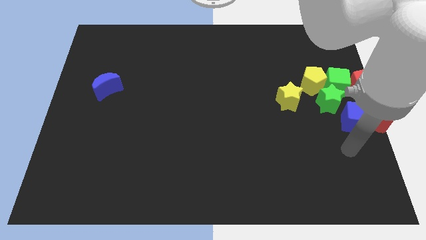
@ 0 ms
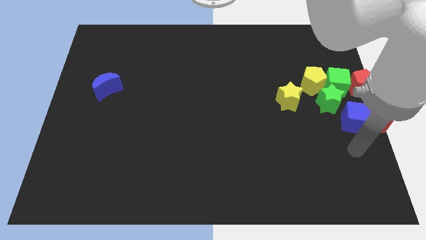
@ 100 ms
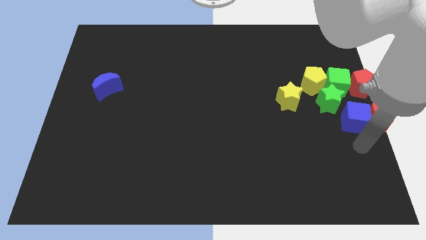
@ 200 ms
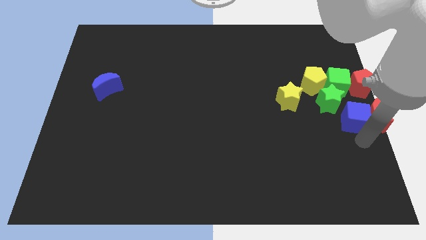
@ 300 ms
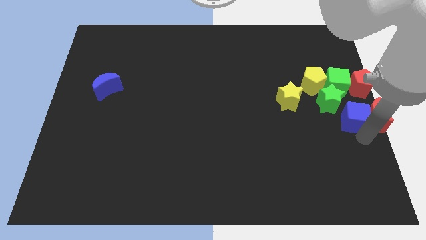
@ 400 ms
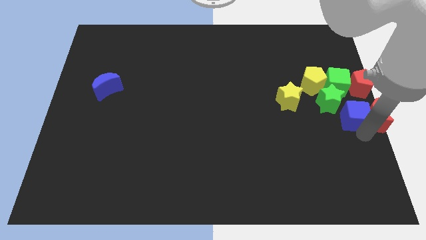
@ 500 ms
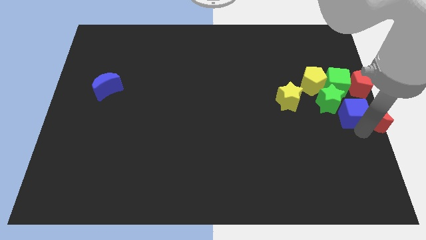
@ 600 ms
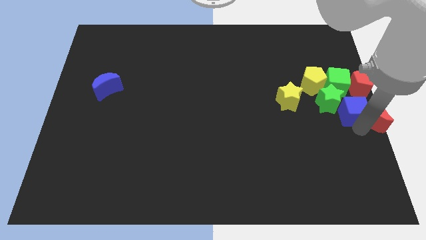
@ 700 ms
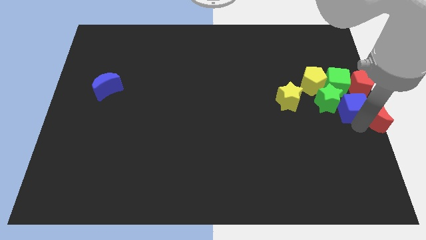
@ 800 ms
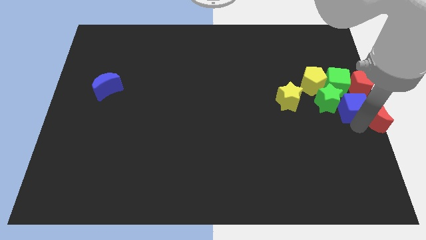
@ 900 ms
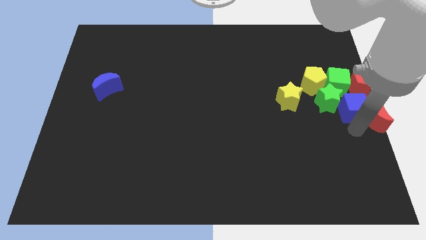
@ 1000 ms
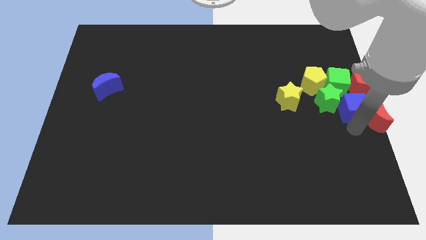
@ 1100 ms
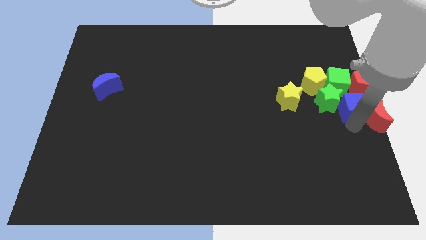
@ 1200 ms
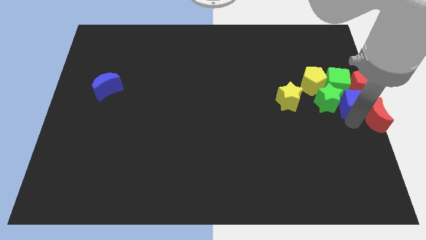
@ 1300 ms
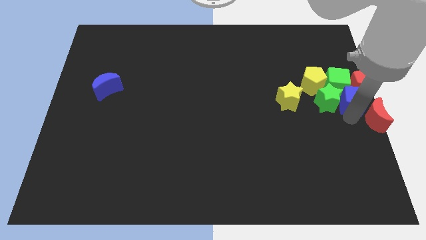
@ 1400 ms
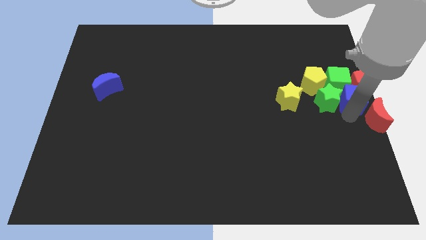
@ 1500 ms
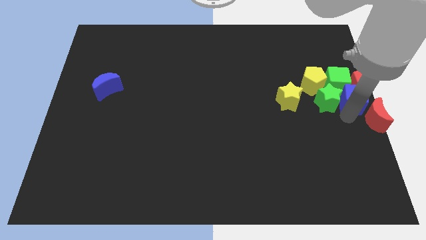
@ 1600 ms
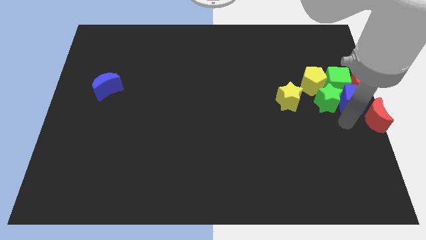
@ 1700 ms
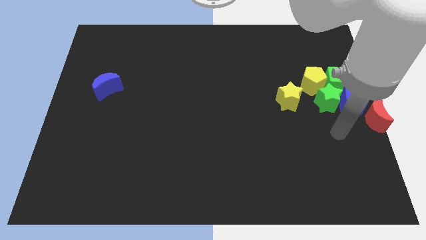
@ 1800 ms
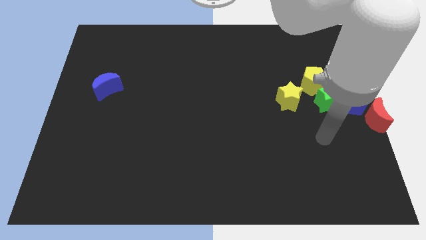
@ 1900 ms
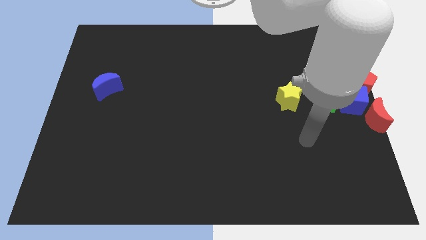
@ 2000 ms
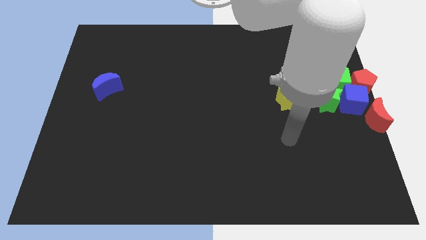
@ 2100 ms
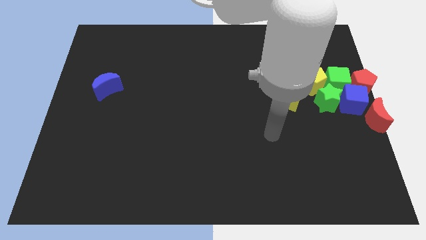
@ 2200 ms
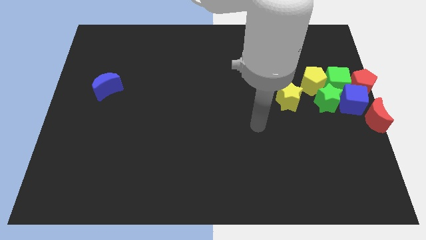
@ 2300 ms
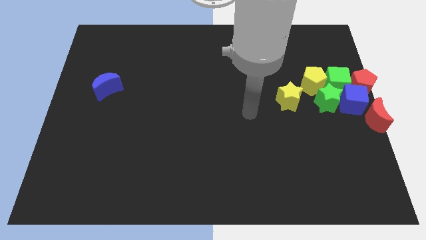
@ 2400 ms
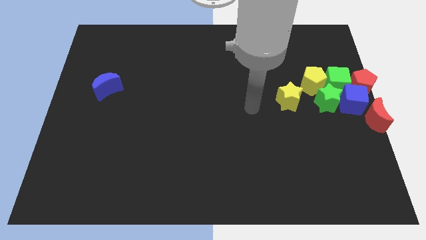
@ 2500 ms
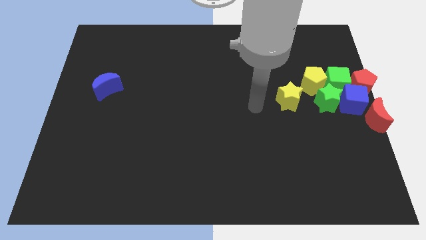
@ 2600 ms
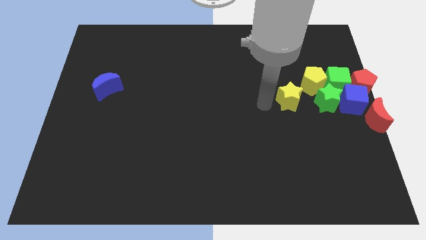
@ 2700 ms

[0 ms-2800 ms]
push the blue cube into the green cube

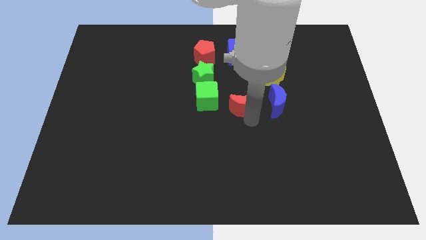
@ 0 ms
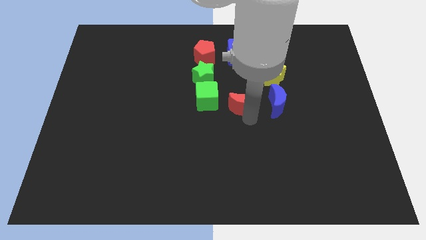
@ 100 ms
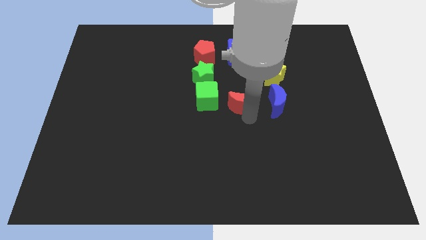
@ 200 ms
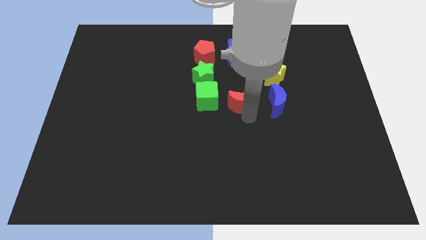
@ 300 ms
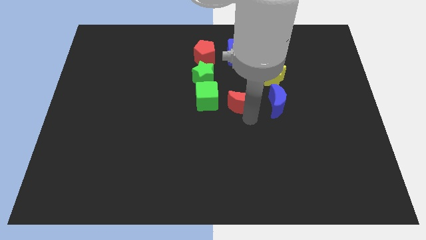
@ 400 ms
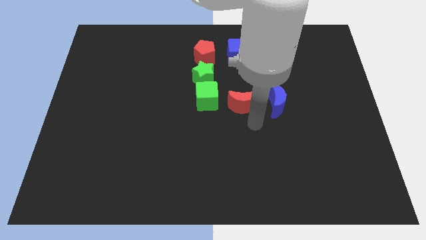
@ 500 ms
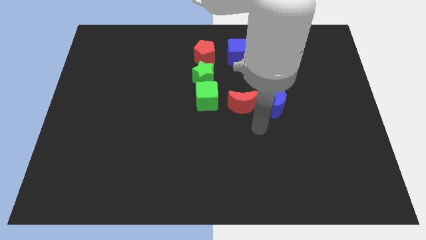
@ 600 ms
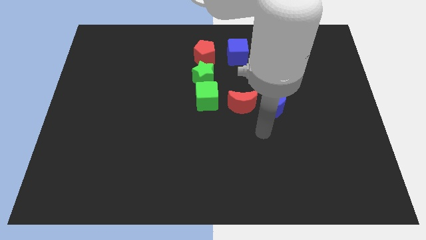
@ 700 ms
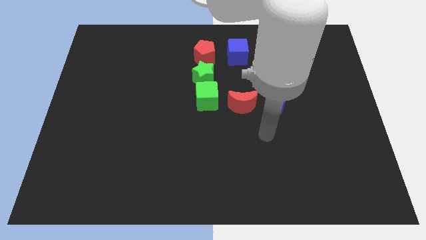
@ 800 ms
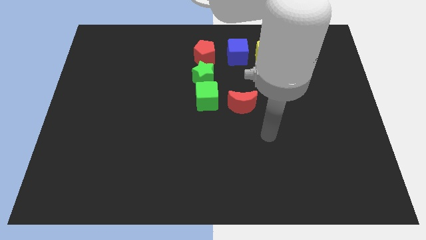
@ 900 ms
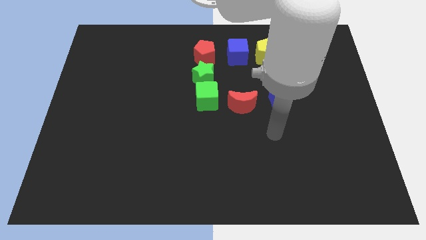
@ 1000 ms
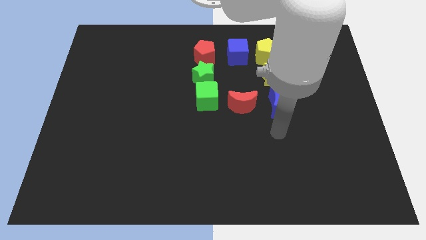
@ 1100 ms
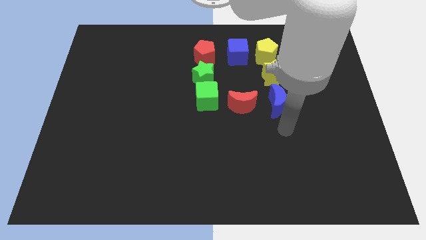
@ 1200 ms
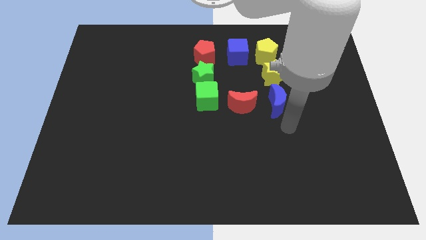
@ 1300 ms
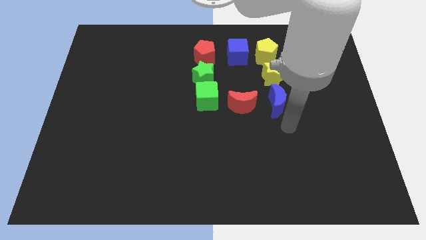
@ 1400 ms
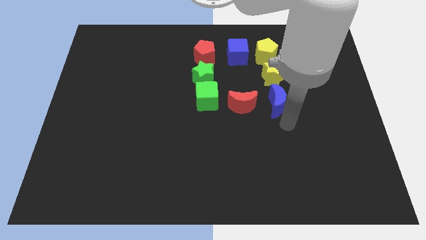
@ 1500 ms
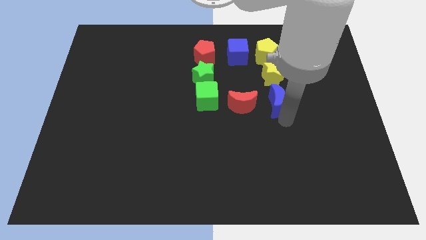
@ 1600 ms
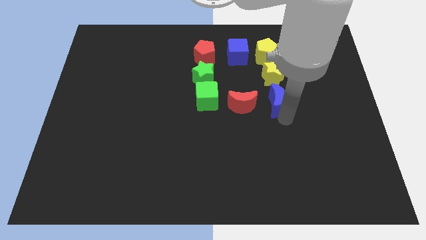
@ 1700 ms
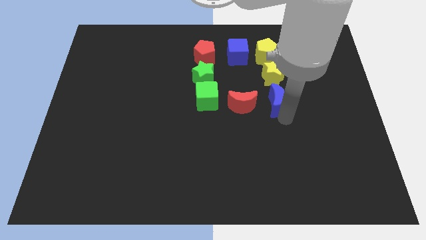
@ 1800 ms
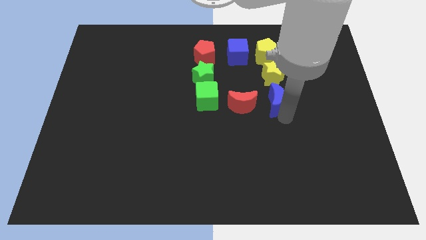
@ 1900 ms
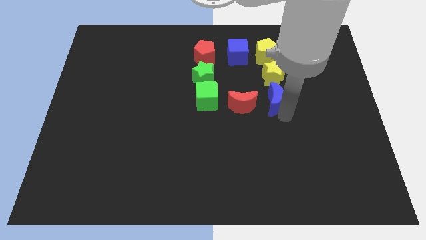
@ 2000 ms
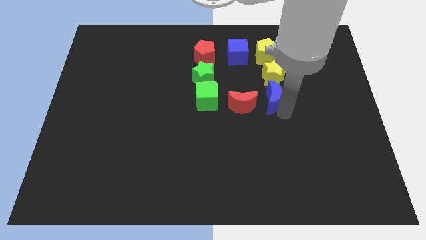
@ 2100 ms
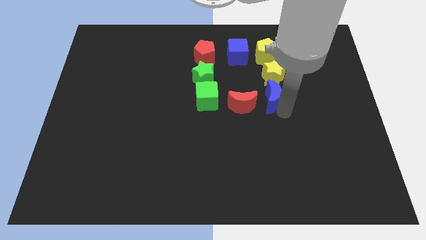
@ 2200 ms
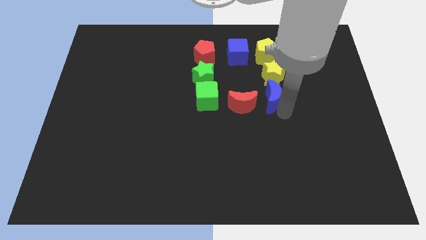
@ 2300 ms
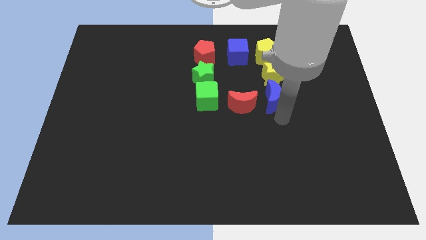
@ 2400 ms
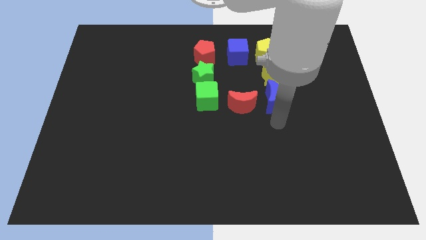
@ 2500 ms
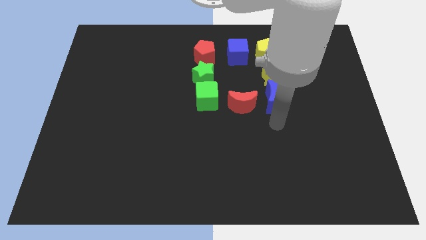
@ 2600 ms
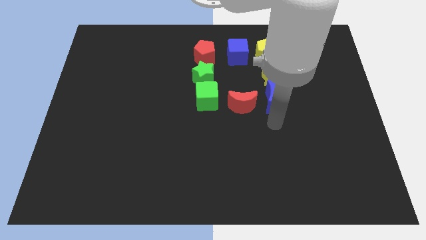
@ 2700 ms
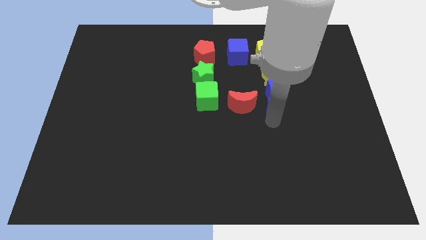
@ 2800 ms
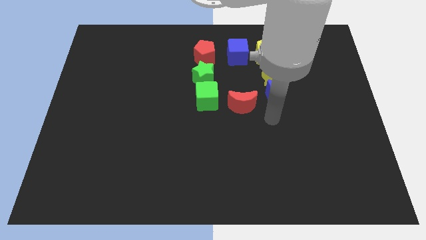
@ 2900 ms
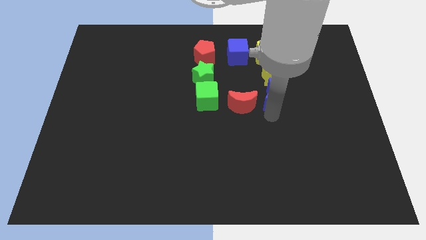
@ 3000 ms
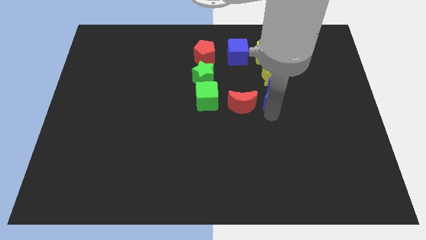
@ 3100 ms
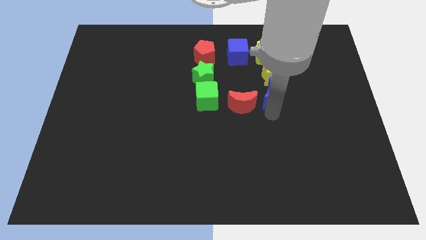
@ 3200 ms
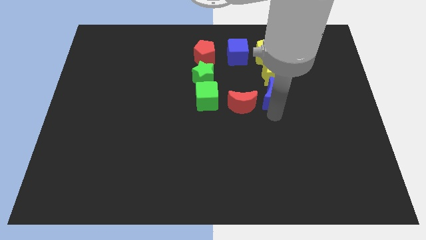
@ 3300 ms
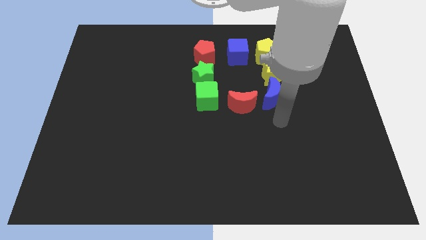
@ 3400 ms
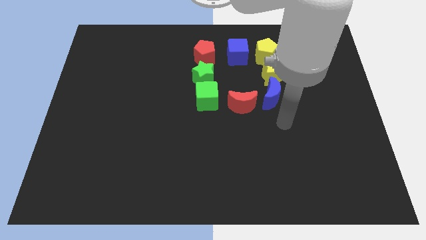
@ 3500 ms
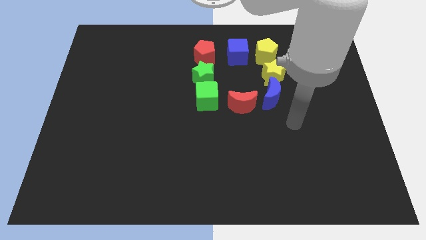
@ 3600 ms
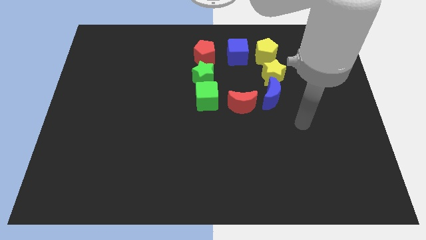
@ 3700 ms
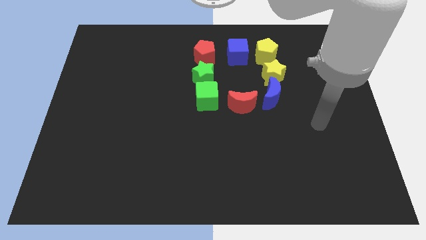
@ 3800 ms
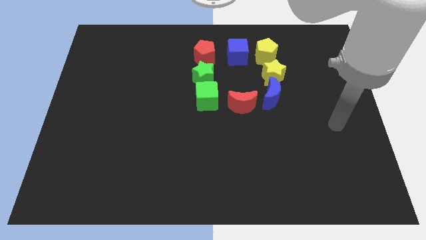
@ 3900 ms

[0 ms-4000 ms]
slide the blue crescent into the yellow star

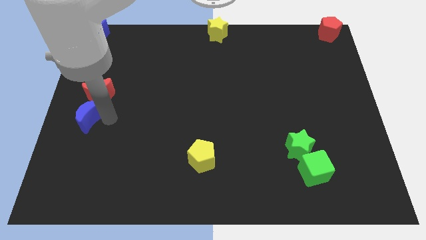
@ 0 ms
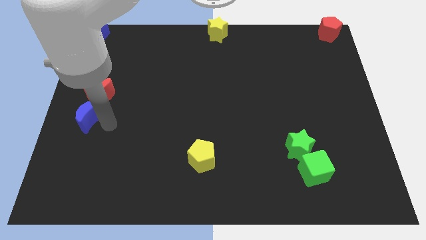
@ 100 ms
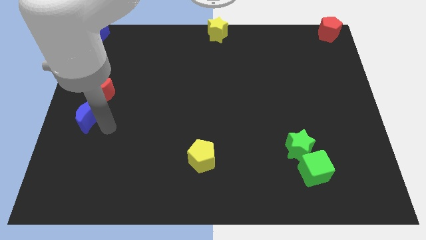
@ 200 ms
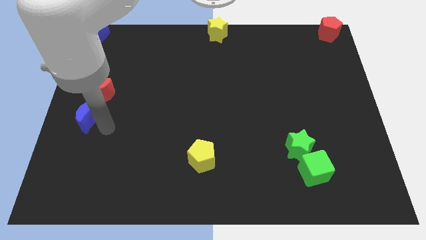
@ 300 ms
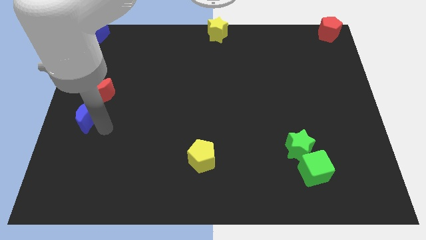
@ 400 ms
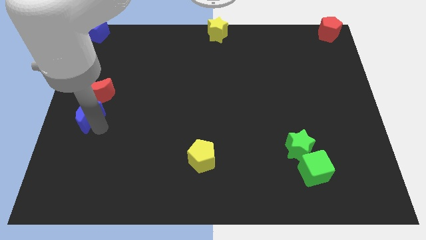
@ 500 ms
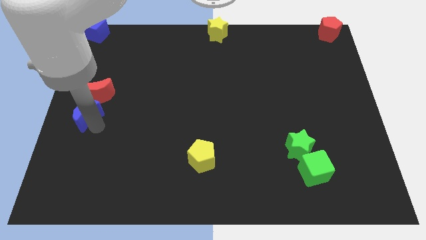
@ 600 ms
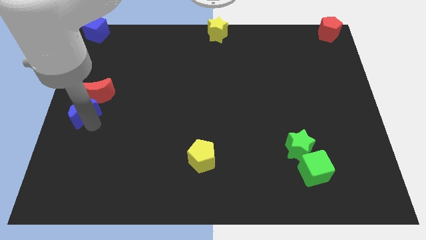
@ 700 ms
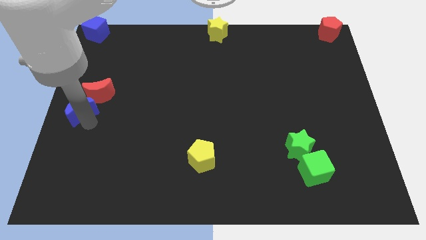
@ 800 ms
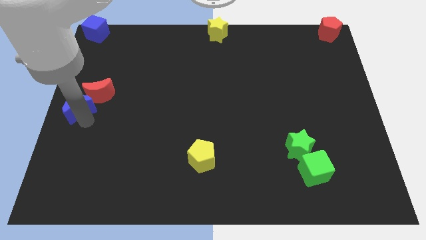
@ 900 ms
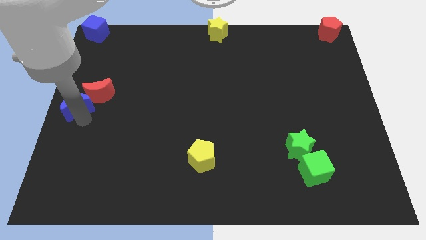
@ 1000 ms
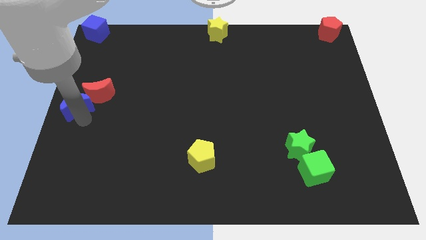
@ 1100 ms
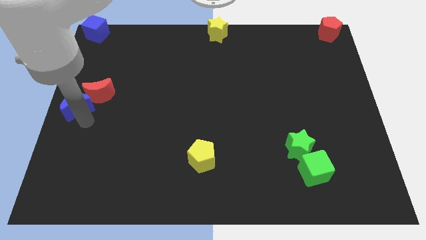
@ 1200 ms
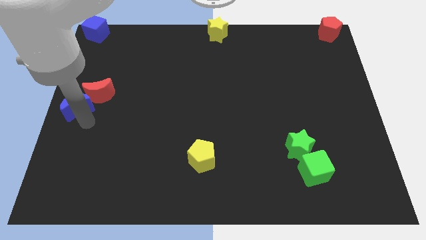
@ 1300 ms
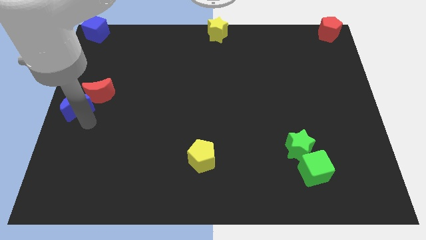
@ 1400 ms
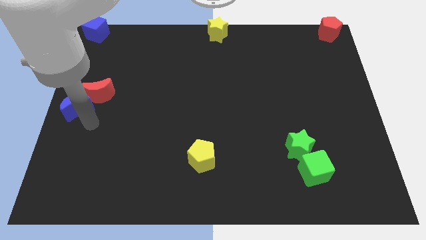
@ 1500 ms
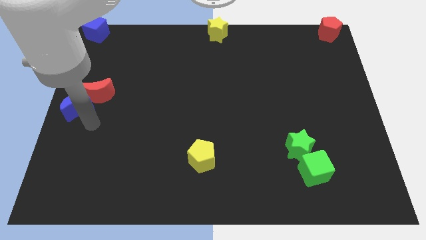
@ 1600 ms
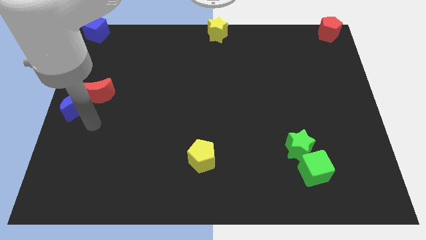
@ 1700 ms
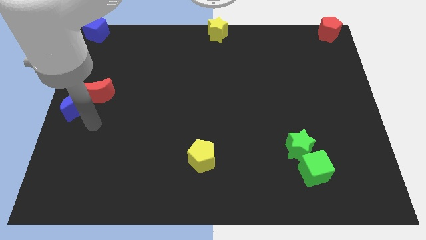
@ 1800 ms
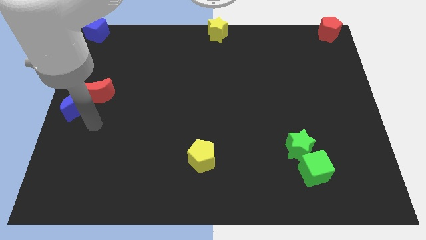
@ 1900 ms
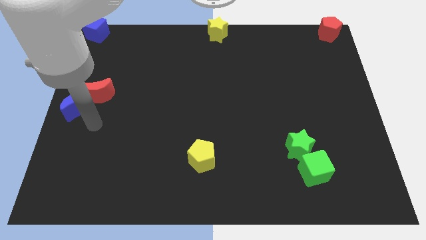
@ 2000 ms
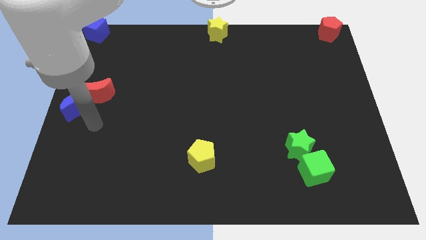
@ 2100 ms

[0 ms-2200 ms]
move the blue crescent towards the red crescent
